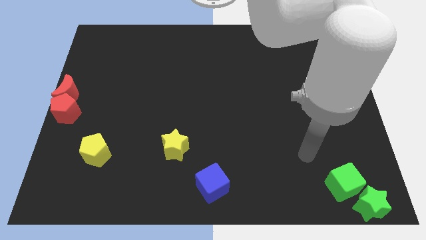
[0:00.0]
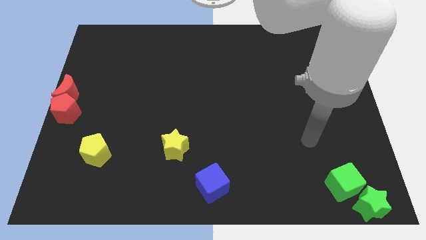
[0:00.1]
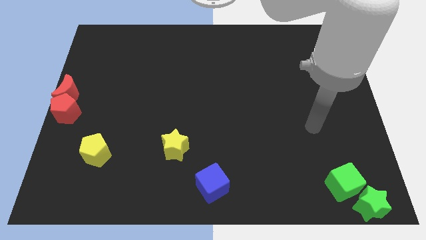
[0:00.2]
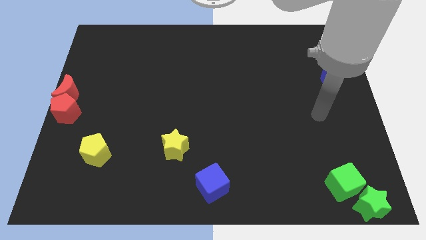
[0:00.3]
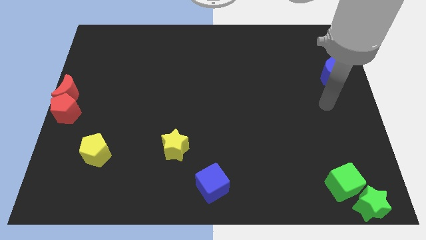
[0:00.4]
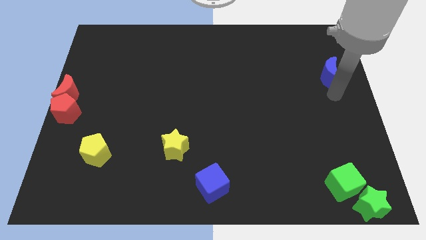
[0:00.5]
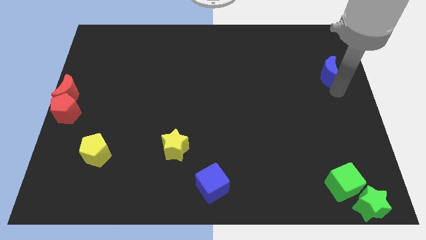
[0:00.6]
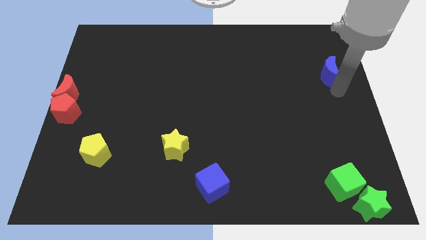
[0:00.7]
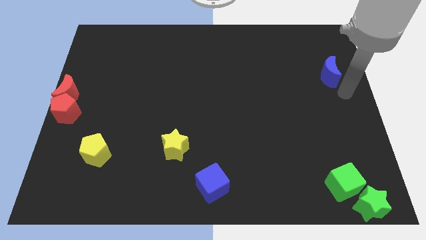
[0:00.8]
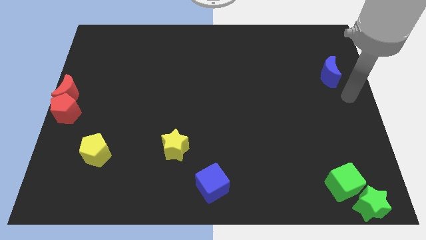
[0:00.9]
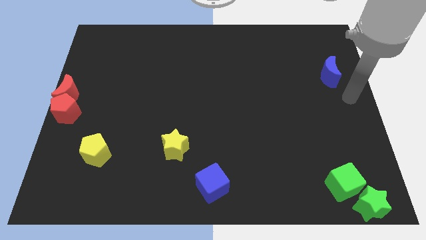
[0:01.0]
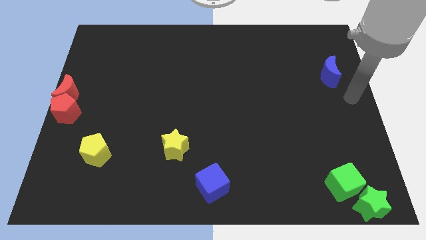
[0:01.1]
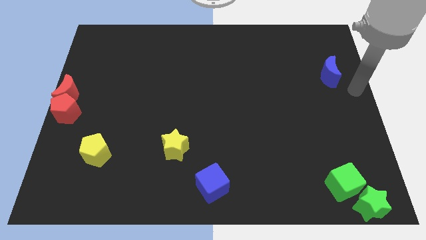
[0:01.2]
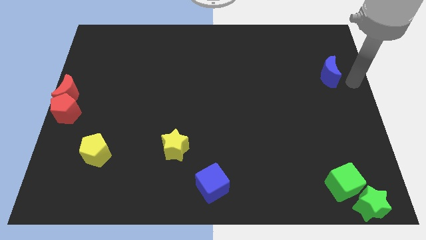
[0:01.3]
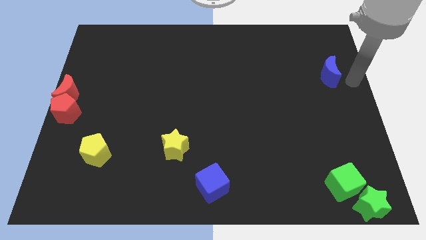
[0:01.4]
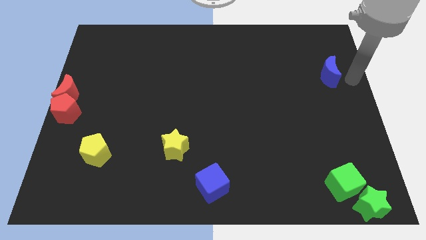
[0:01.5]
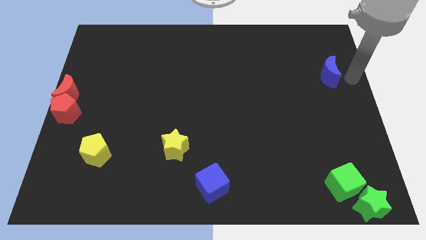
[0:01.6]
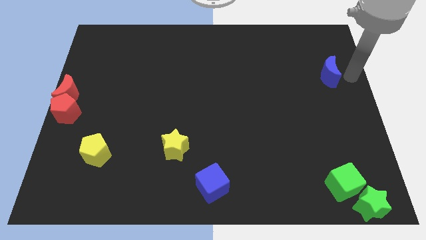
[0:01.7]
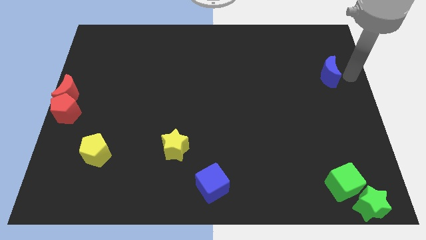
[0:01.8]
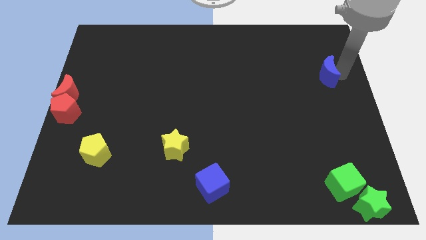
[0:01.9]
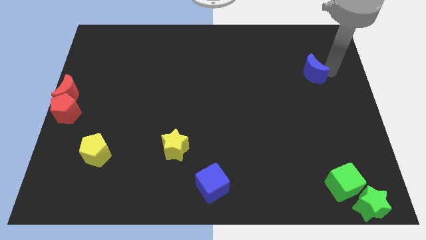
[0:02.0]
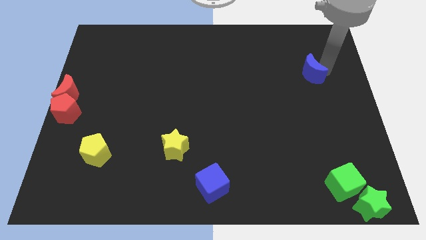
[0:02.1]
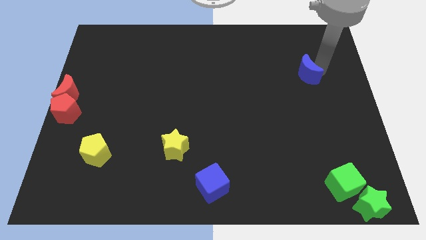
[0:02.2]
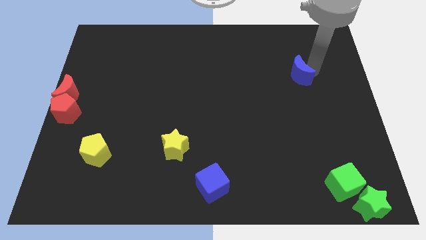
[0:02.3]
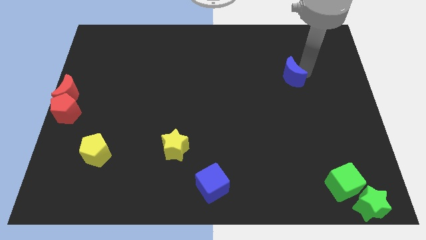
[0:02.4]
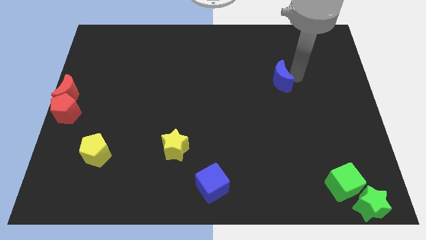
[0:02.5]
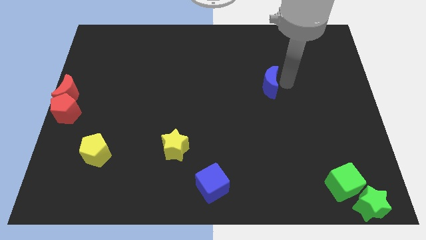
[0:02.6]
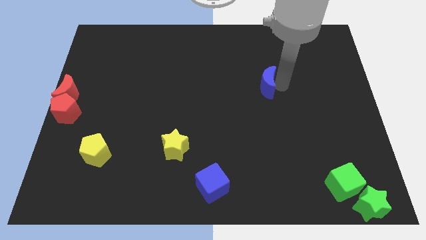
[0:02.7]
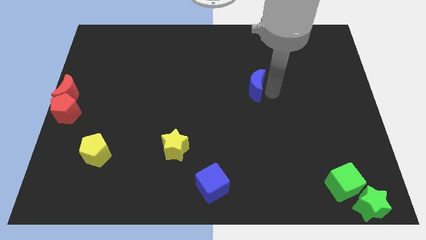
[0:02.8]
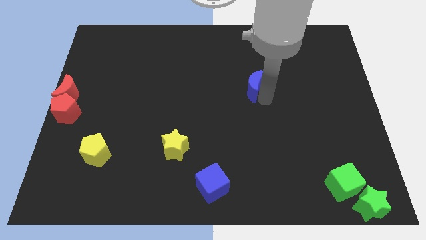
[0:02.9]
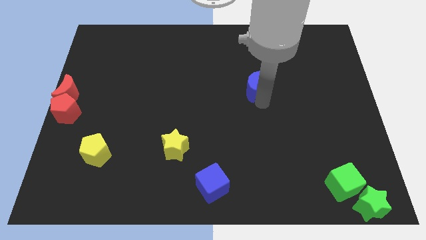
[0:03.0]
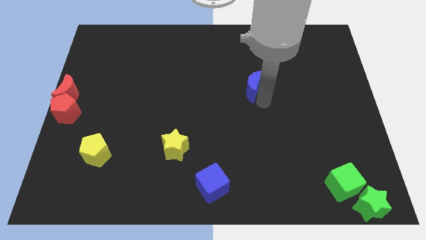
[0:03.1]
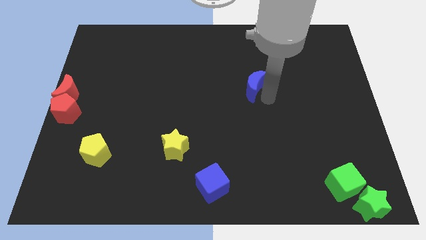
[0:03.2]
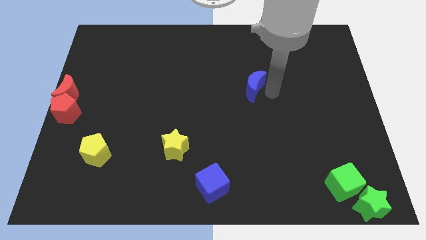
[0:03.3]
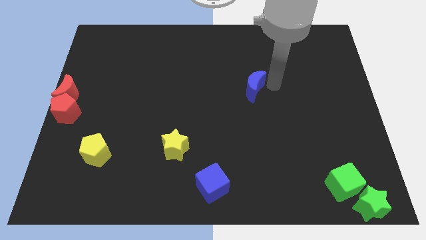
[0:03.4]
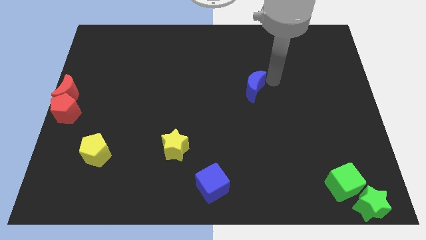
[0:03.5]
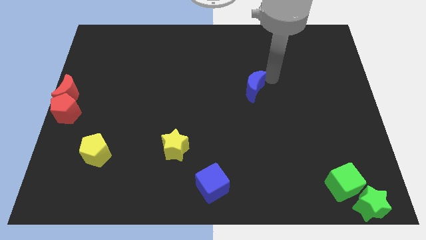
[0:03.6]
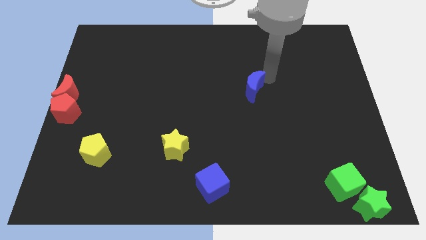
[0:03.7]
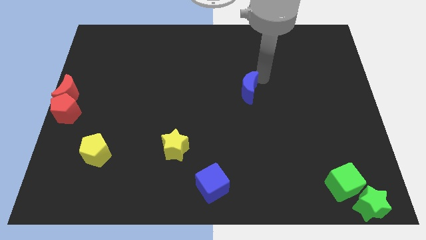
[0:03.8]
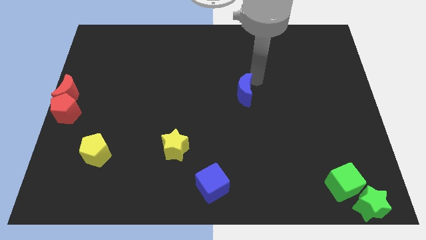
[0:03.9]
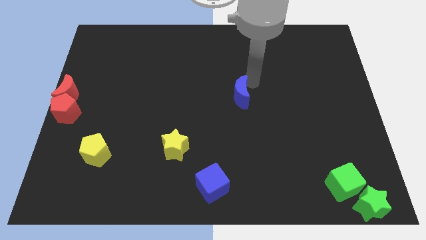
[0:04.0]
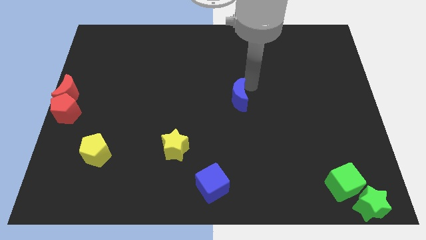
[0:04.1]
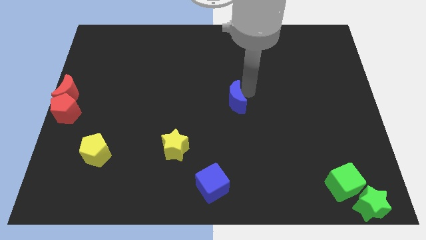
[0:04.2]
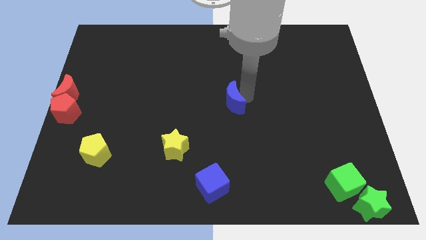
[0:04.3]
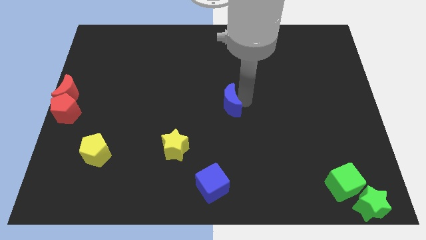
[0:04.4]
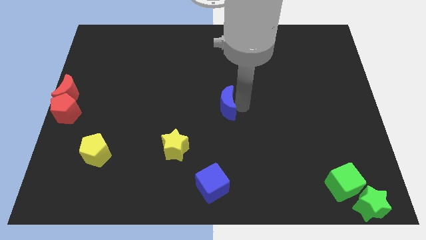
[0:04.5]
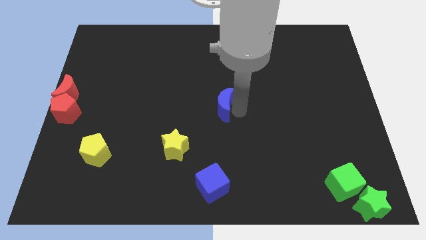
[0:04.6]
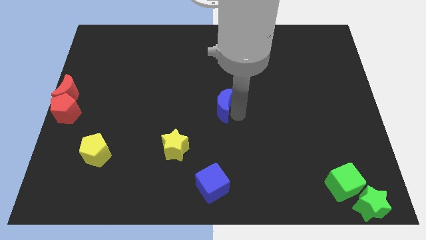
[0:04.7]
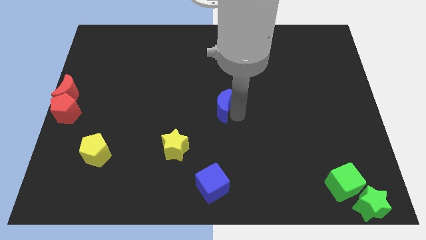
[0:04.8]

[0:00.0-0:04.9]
move the blue moon to the middle of the board

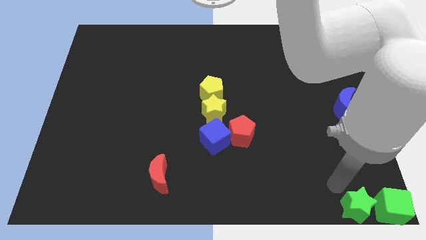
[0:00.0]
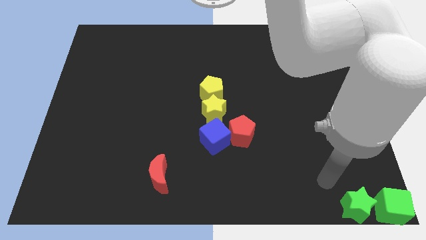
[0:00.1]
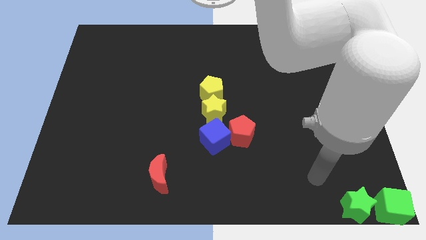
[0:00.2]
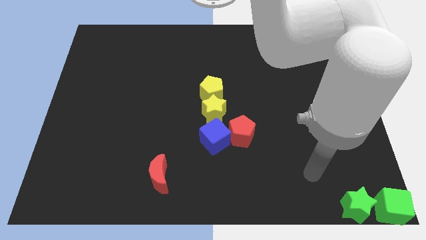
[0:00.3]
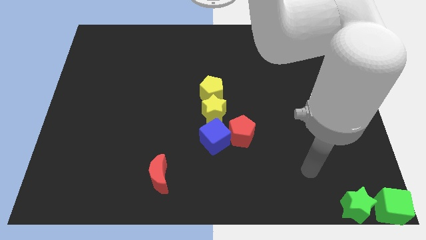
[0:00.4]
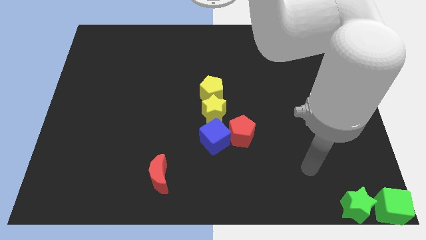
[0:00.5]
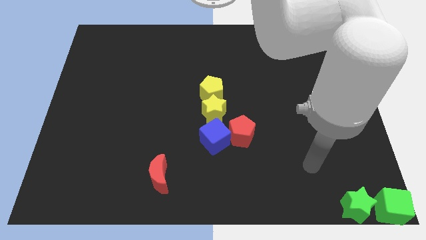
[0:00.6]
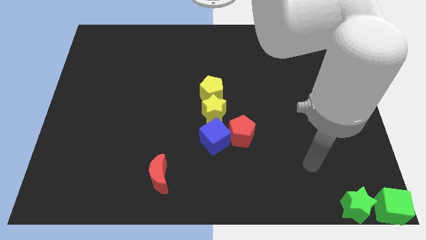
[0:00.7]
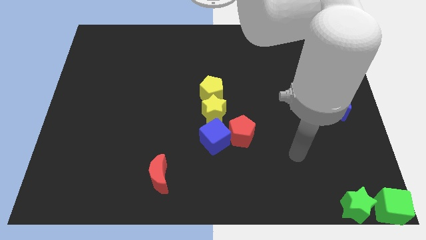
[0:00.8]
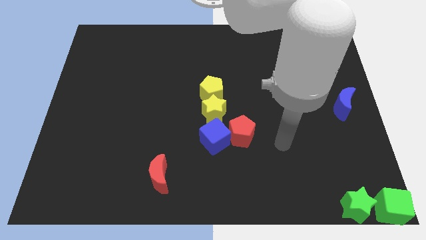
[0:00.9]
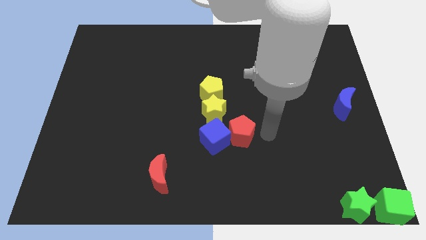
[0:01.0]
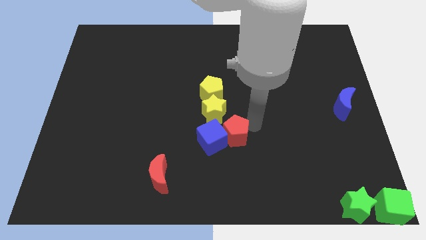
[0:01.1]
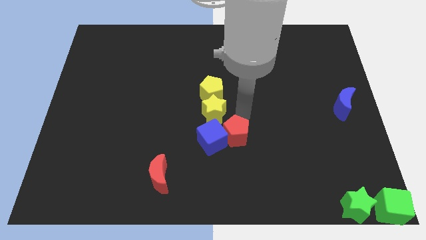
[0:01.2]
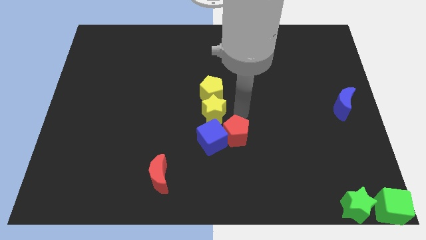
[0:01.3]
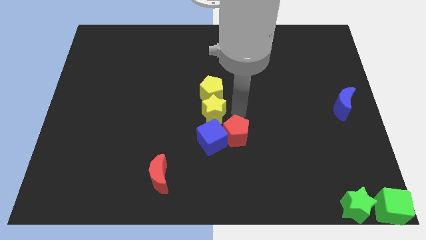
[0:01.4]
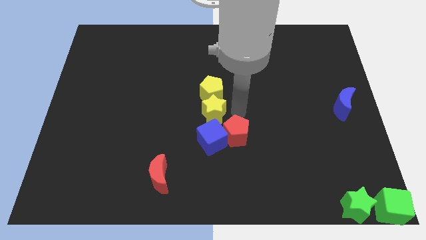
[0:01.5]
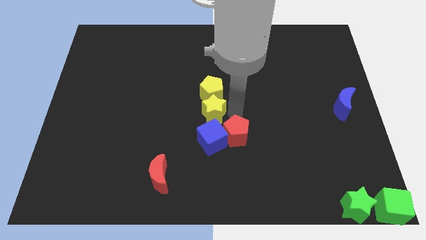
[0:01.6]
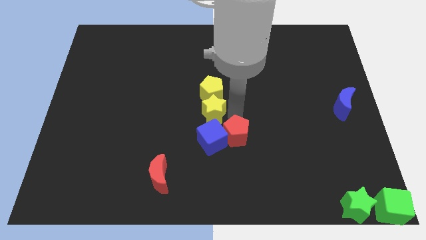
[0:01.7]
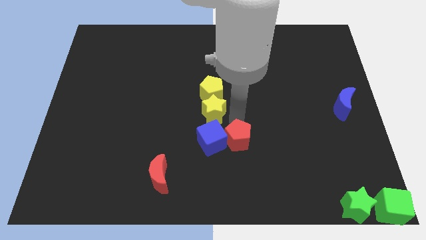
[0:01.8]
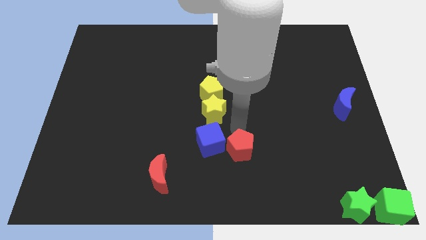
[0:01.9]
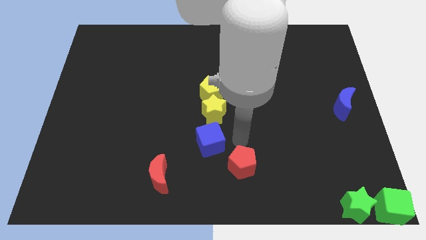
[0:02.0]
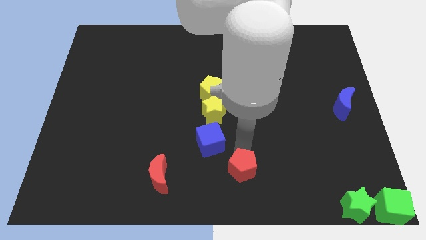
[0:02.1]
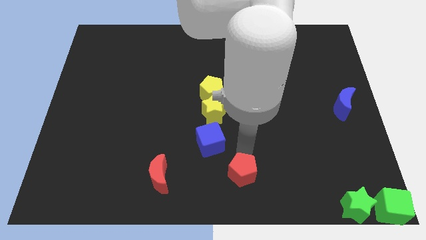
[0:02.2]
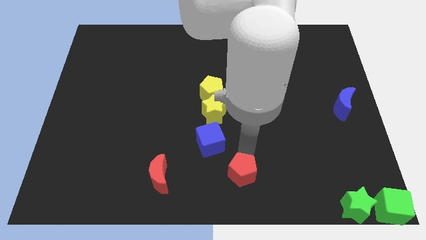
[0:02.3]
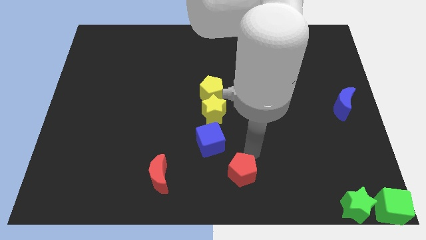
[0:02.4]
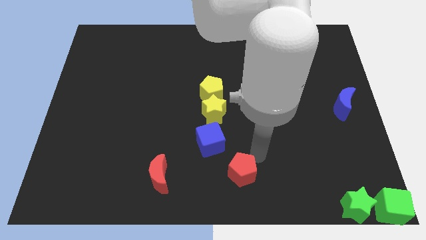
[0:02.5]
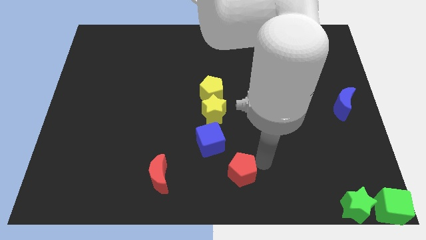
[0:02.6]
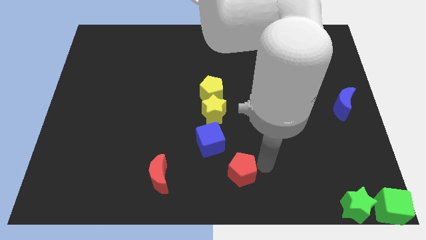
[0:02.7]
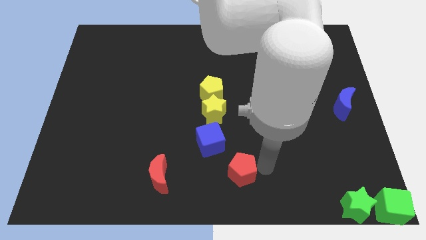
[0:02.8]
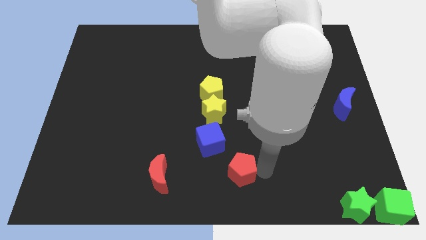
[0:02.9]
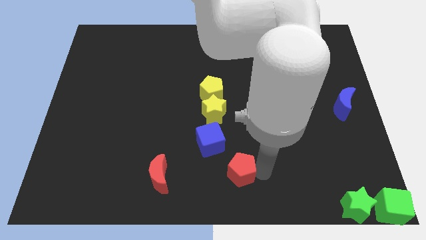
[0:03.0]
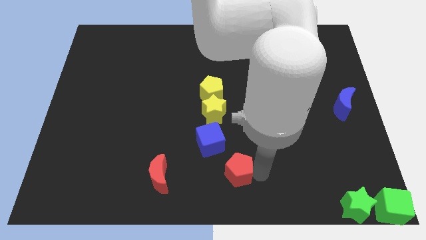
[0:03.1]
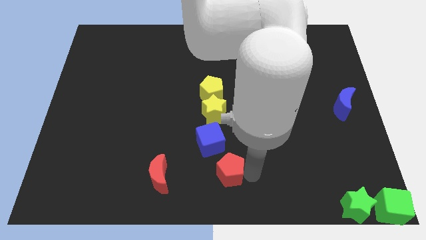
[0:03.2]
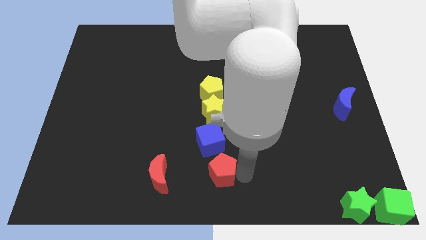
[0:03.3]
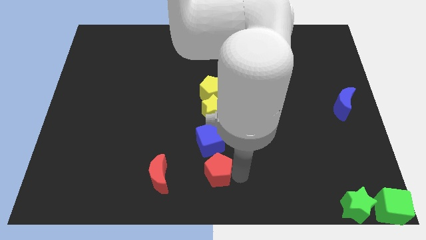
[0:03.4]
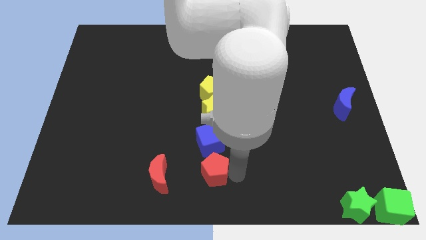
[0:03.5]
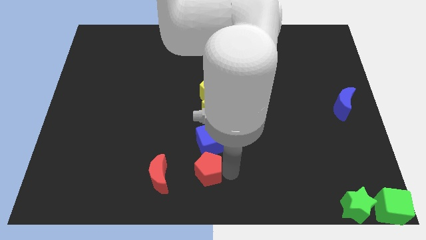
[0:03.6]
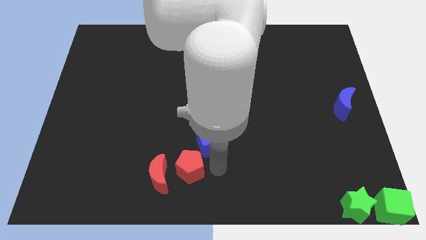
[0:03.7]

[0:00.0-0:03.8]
place the red pentagon below the blue cube

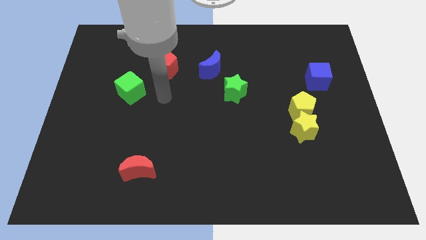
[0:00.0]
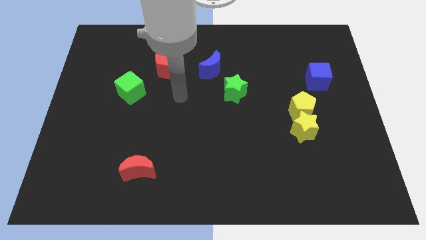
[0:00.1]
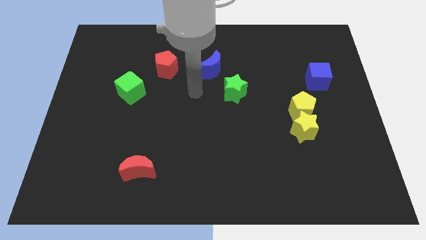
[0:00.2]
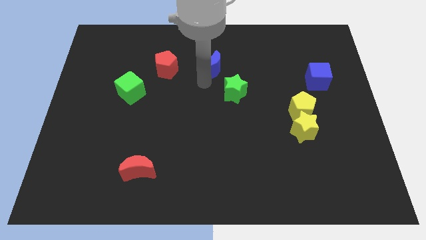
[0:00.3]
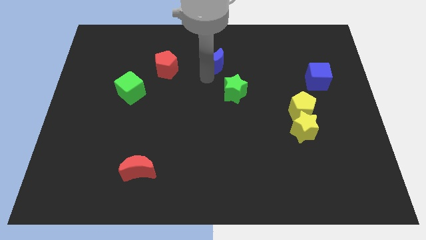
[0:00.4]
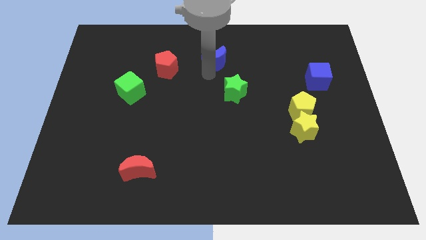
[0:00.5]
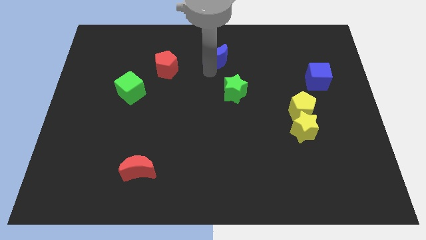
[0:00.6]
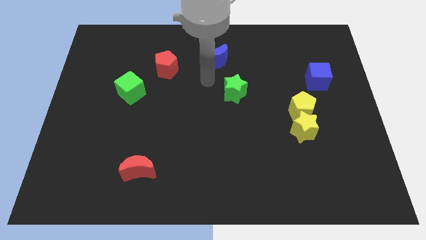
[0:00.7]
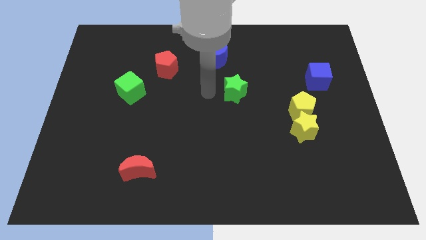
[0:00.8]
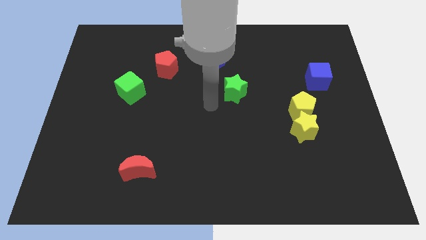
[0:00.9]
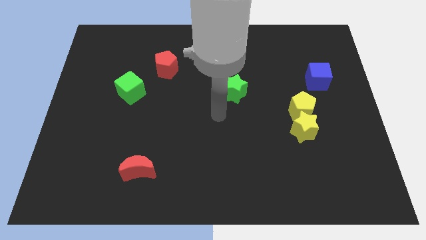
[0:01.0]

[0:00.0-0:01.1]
move the blue crescent up slightly
